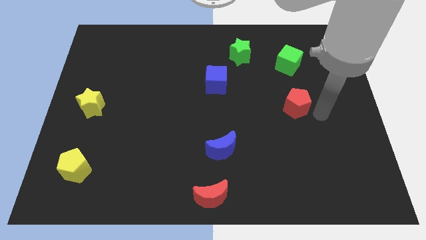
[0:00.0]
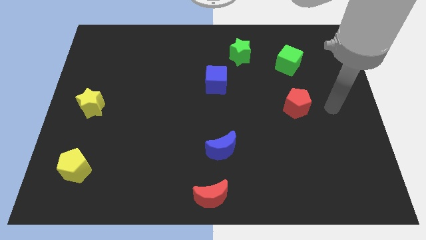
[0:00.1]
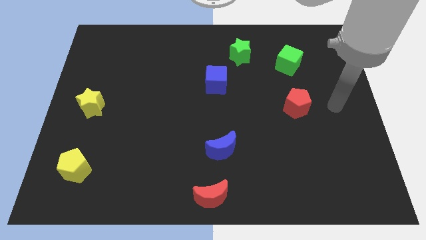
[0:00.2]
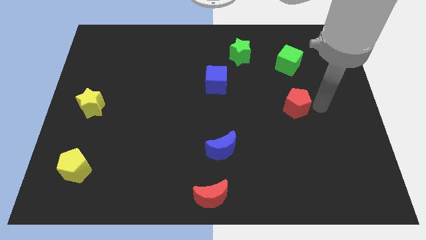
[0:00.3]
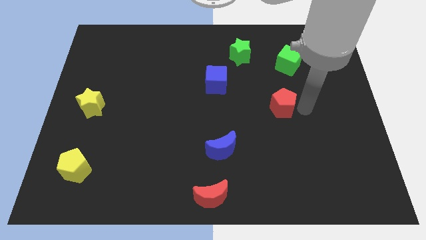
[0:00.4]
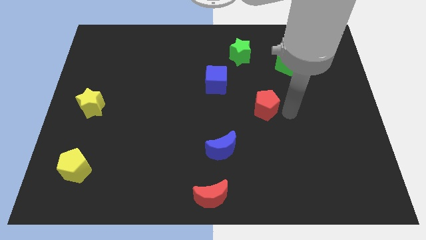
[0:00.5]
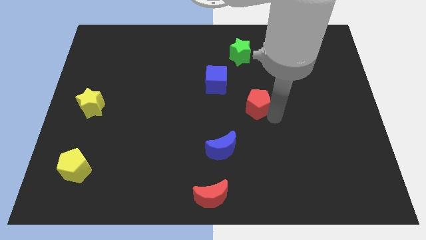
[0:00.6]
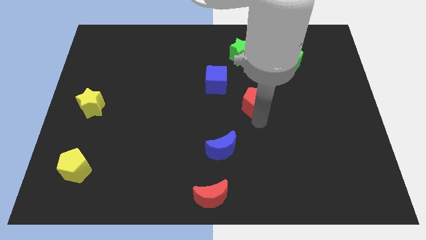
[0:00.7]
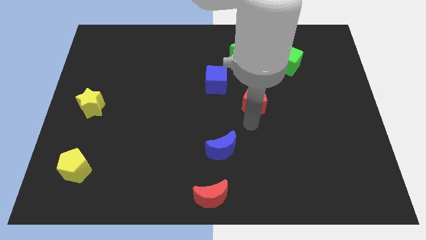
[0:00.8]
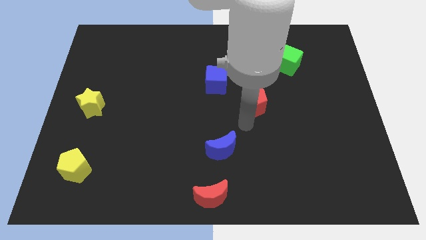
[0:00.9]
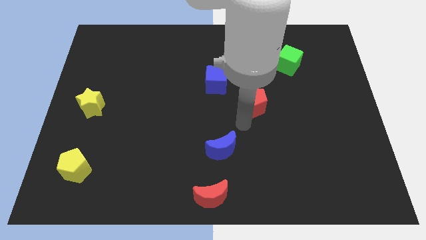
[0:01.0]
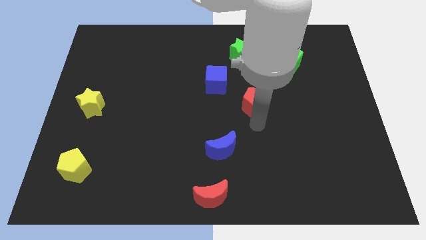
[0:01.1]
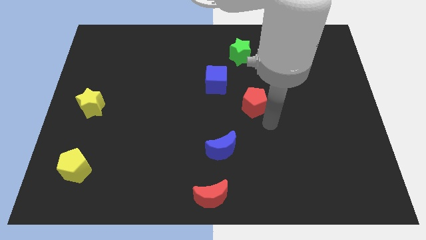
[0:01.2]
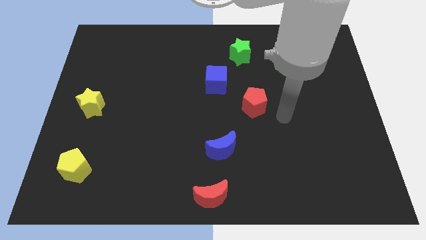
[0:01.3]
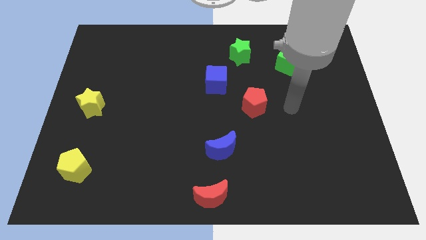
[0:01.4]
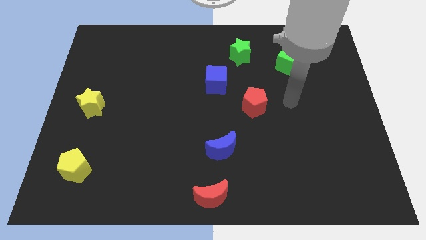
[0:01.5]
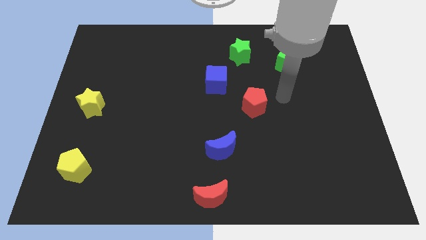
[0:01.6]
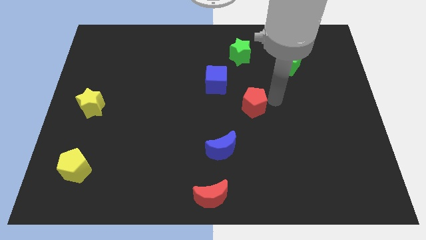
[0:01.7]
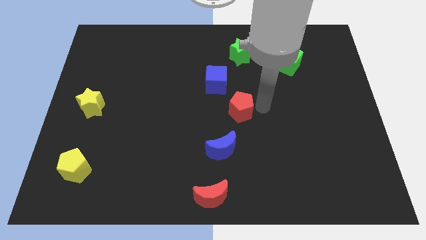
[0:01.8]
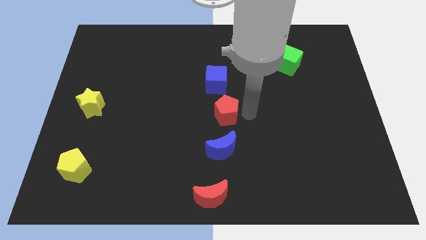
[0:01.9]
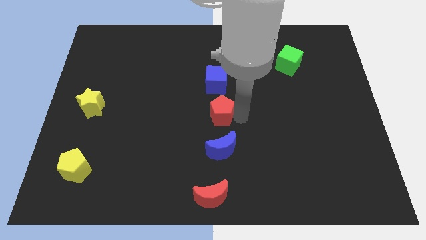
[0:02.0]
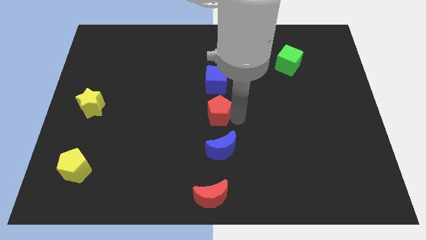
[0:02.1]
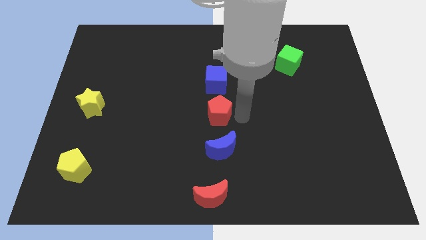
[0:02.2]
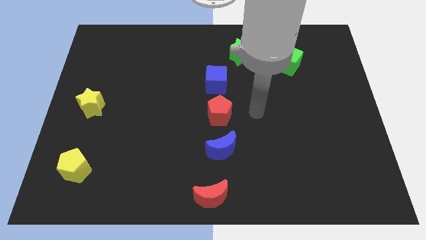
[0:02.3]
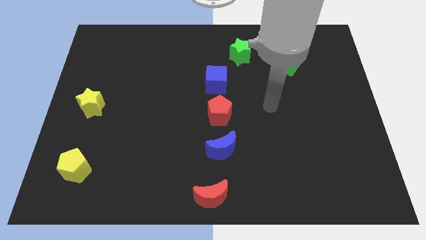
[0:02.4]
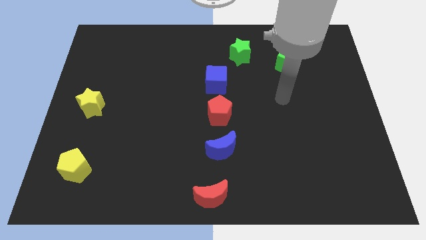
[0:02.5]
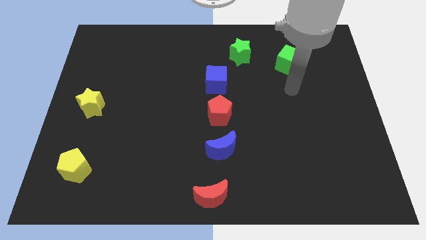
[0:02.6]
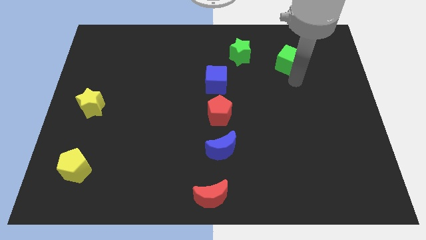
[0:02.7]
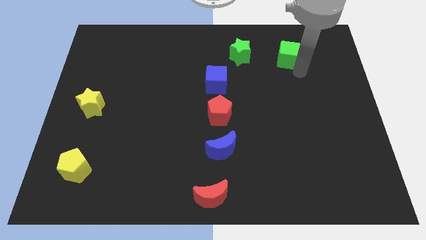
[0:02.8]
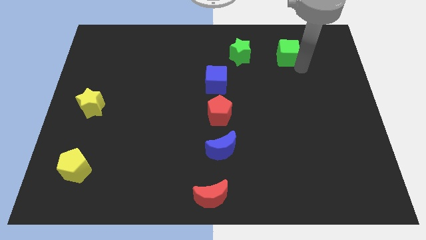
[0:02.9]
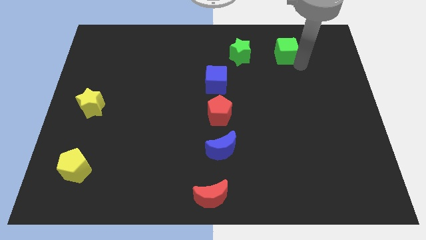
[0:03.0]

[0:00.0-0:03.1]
place the red pentagon in between the blue cube and blue crescent

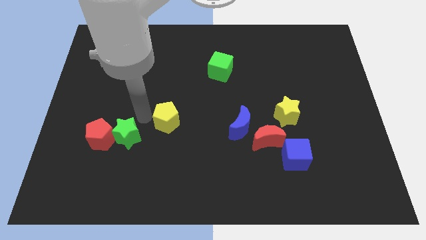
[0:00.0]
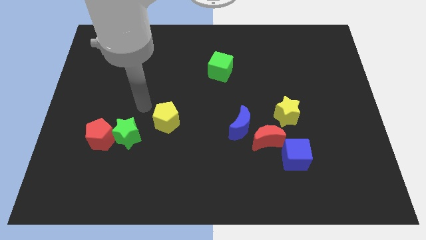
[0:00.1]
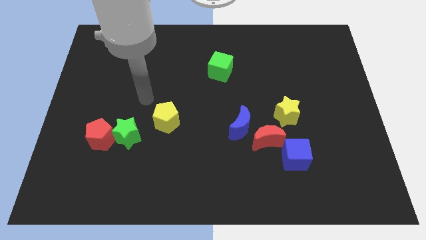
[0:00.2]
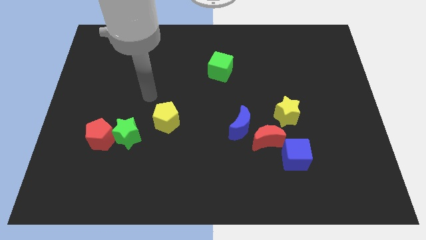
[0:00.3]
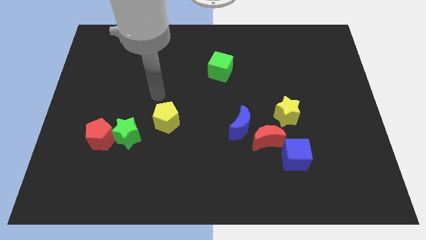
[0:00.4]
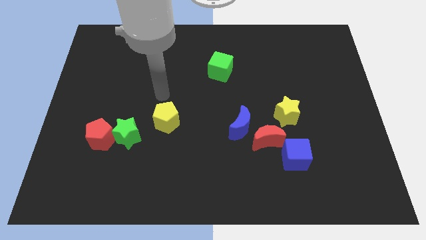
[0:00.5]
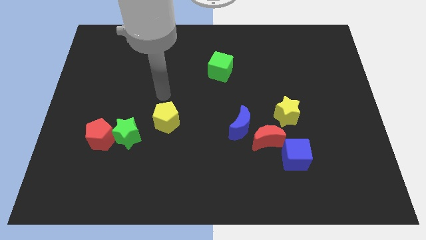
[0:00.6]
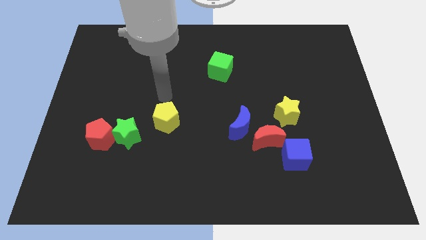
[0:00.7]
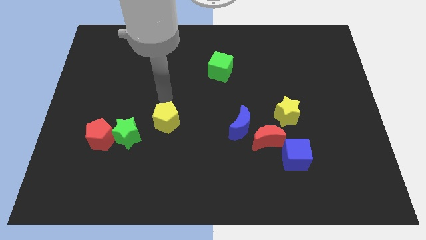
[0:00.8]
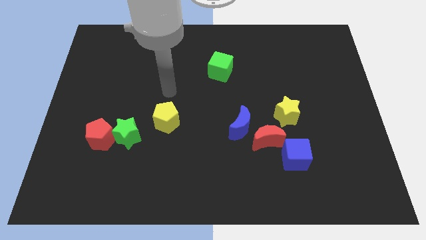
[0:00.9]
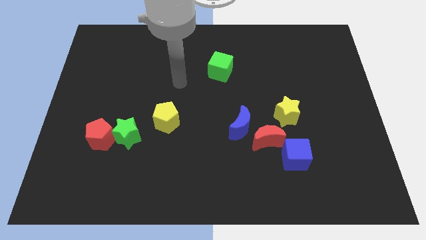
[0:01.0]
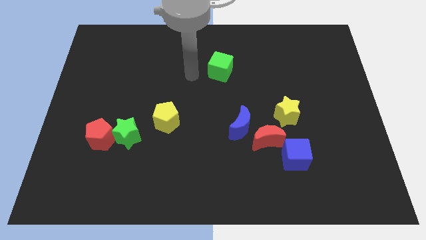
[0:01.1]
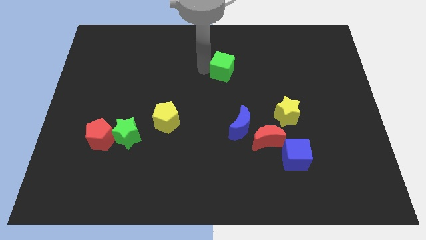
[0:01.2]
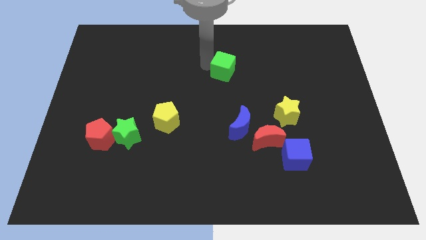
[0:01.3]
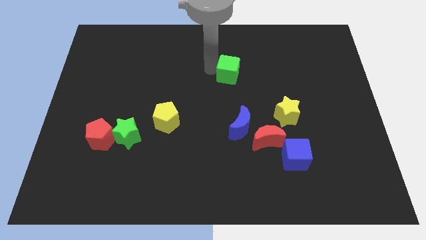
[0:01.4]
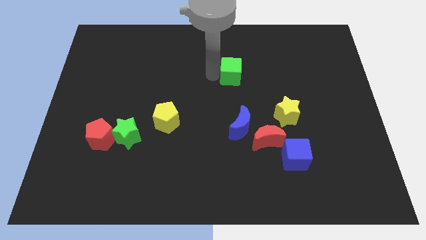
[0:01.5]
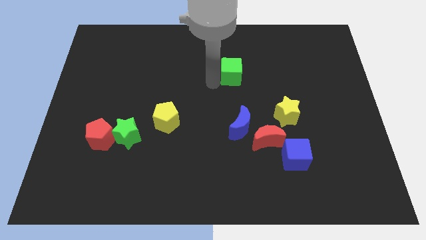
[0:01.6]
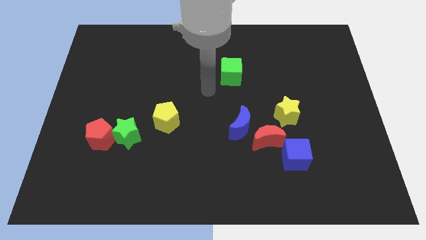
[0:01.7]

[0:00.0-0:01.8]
push the green cube vertically above the blue moon

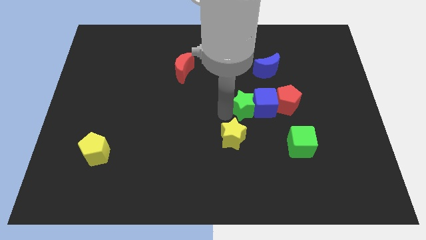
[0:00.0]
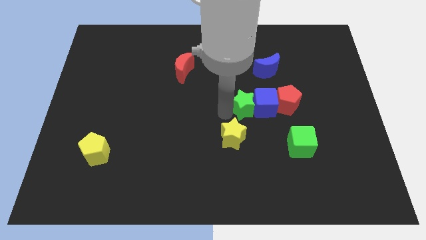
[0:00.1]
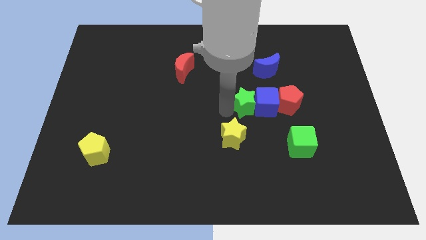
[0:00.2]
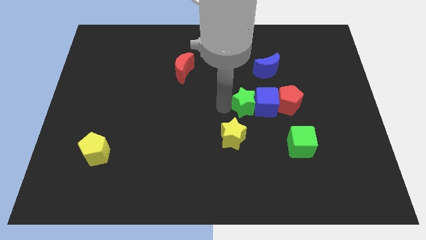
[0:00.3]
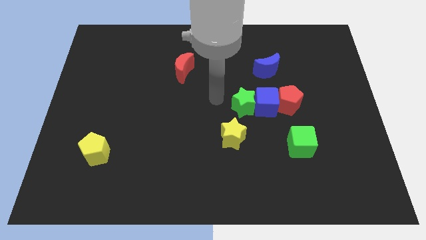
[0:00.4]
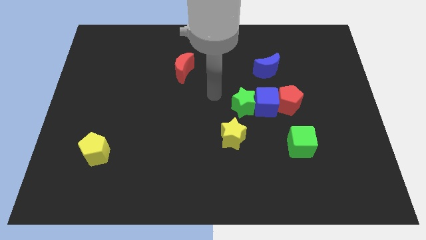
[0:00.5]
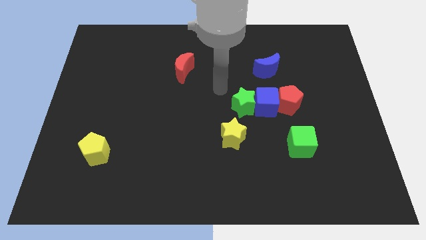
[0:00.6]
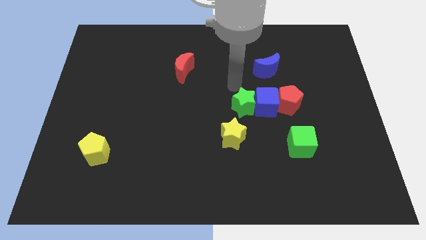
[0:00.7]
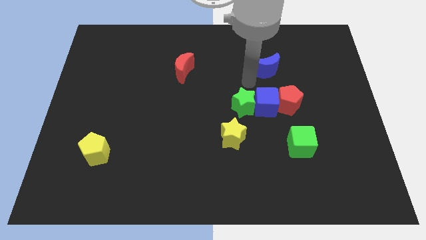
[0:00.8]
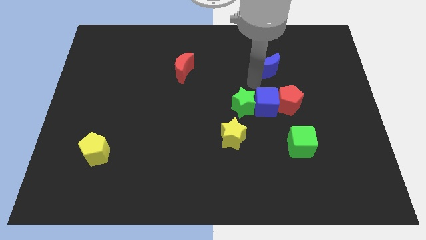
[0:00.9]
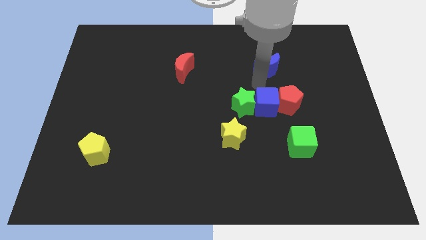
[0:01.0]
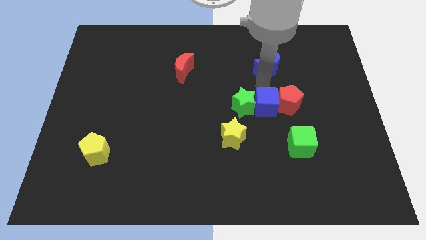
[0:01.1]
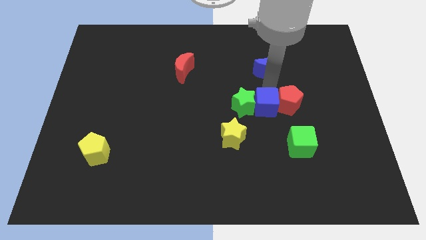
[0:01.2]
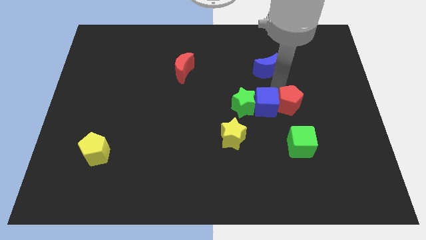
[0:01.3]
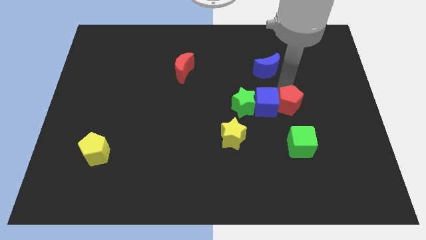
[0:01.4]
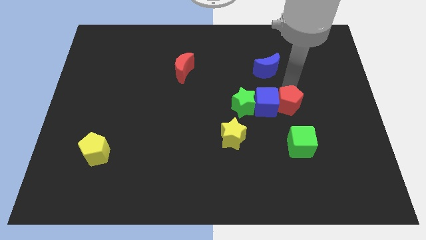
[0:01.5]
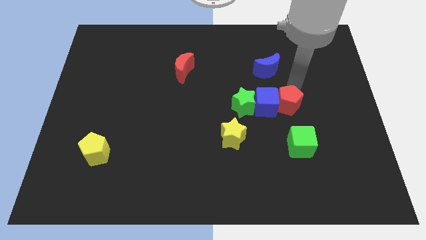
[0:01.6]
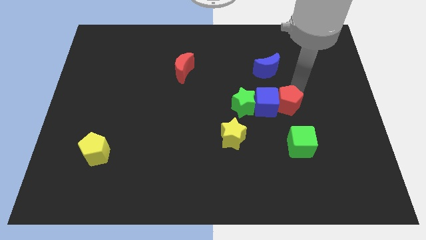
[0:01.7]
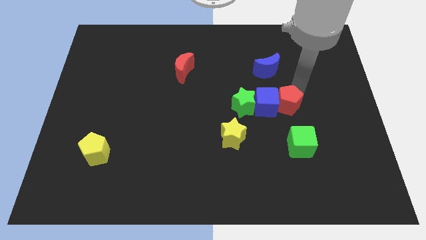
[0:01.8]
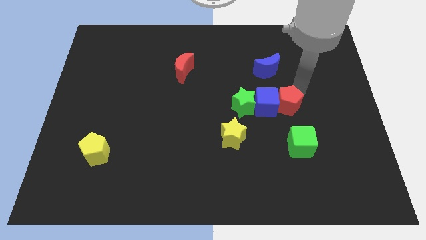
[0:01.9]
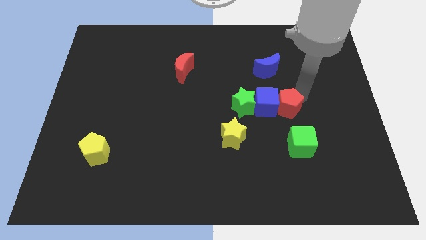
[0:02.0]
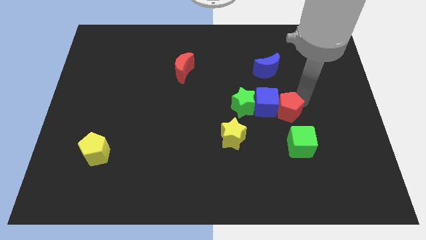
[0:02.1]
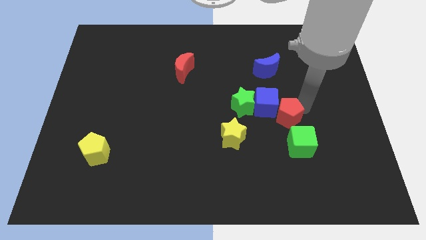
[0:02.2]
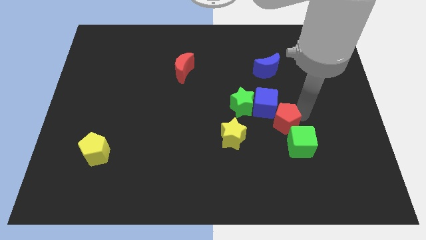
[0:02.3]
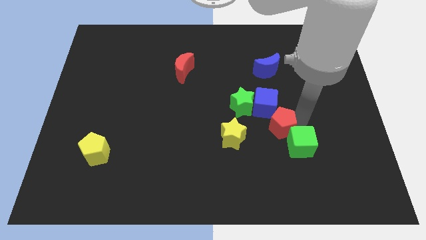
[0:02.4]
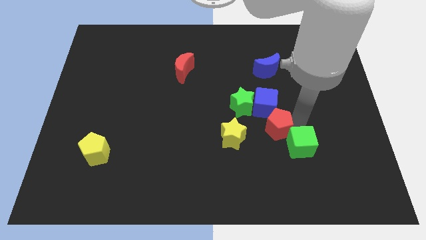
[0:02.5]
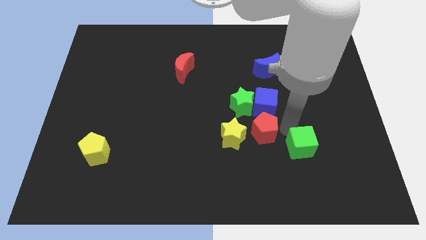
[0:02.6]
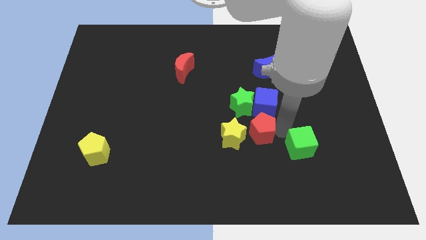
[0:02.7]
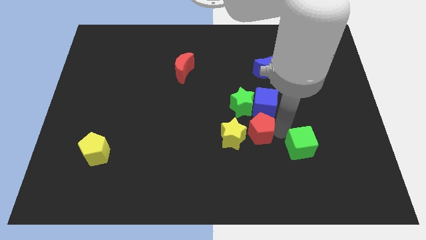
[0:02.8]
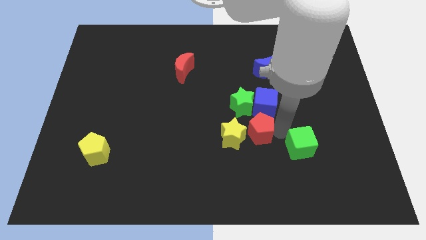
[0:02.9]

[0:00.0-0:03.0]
place red pentagon to the bottom of blue cube

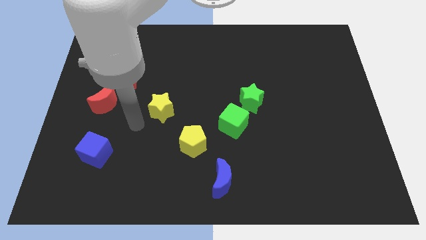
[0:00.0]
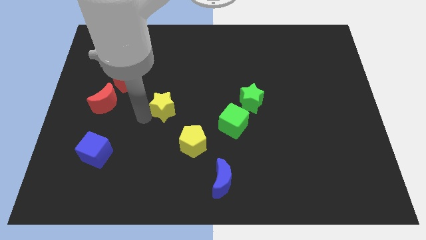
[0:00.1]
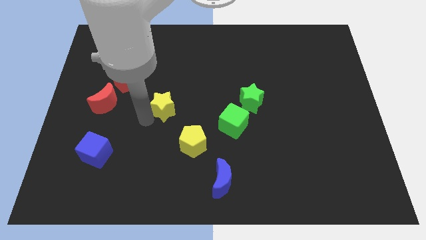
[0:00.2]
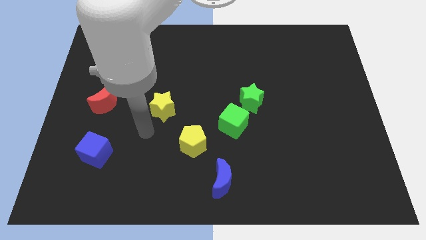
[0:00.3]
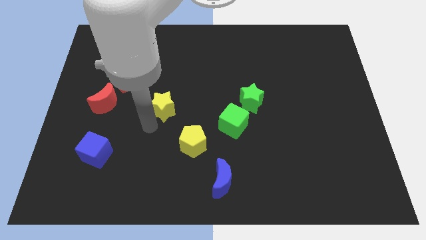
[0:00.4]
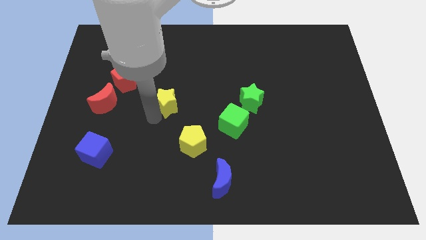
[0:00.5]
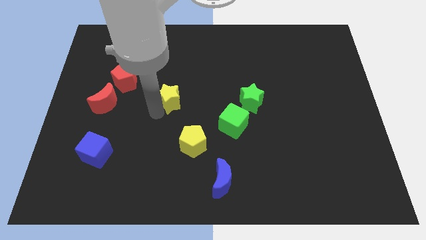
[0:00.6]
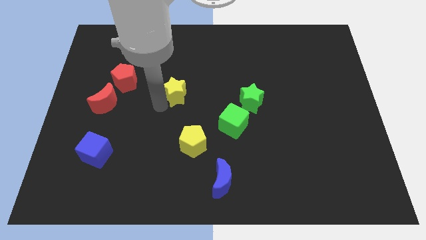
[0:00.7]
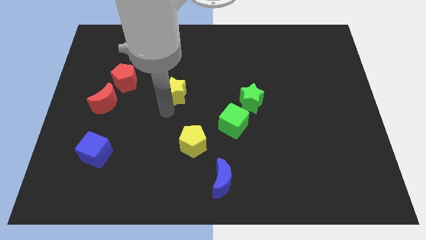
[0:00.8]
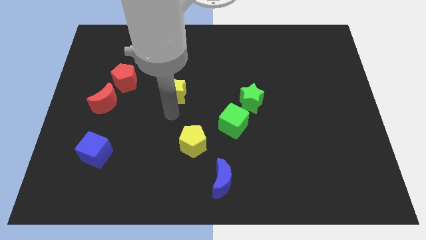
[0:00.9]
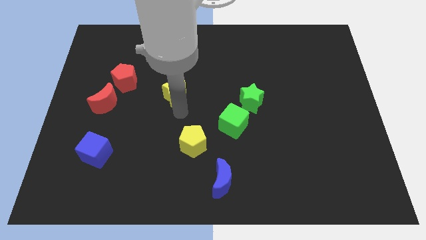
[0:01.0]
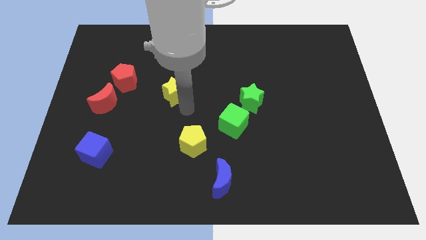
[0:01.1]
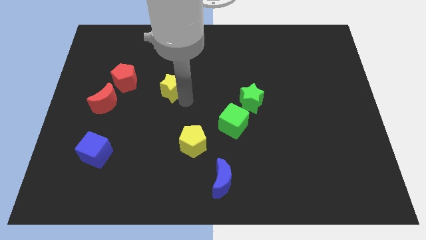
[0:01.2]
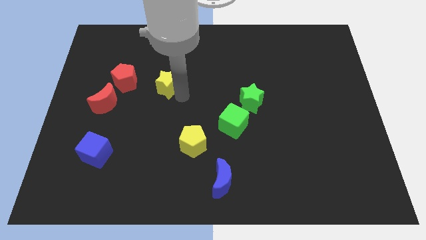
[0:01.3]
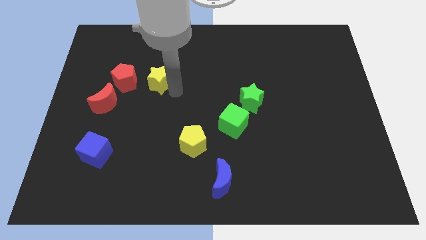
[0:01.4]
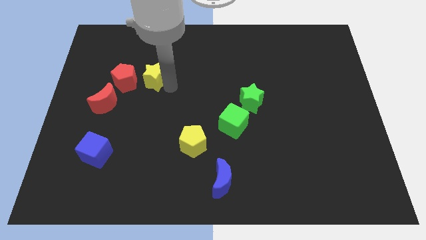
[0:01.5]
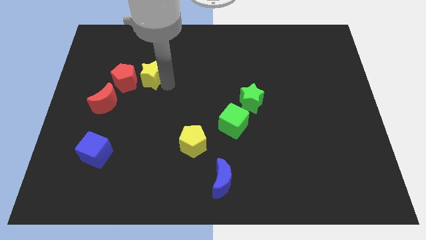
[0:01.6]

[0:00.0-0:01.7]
move yellow star towards the red pentagon
